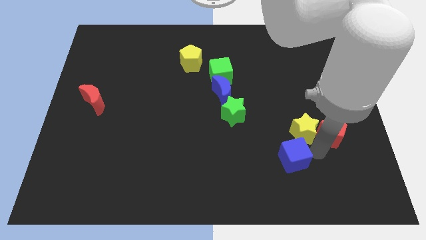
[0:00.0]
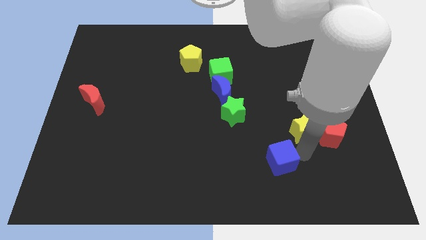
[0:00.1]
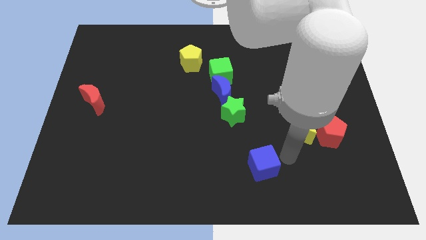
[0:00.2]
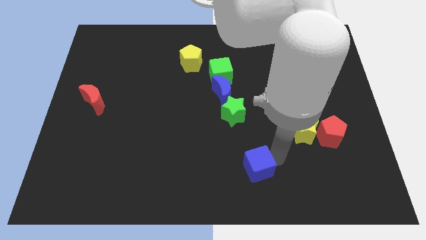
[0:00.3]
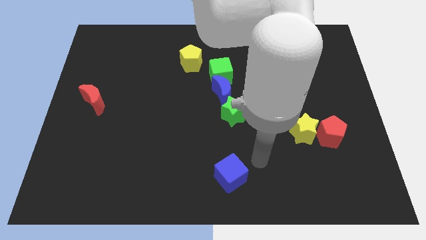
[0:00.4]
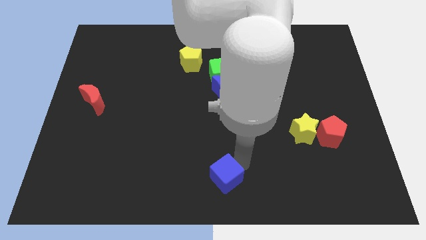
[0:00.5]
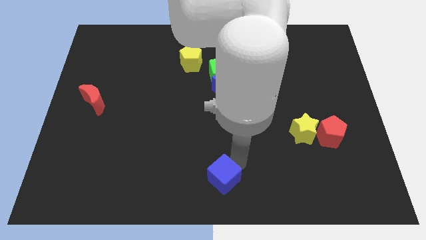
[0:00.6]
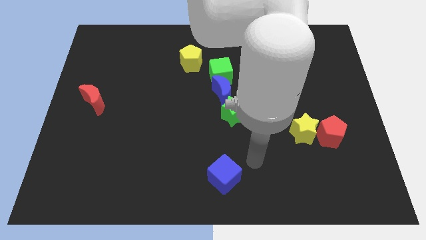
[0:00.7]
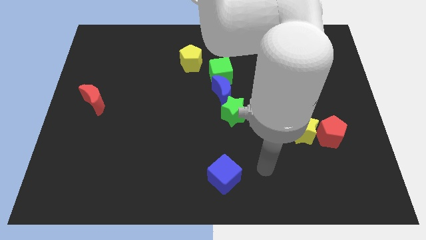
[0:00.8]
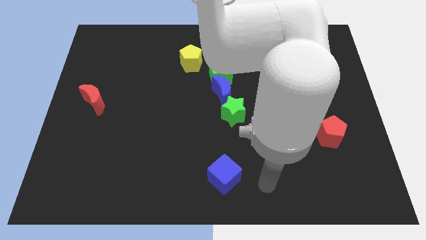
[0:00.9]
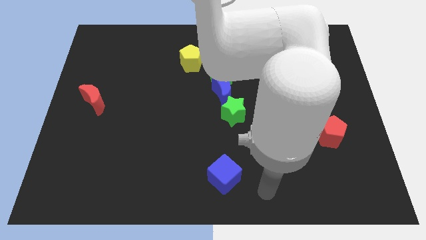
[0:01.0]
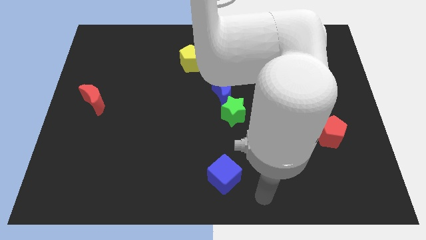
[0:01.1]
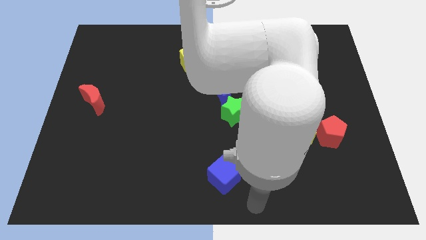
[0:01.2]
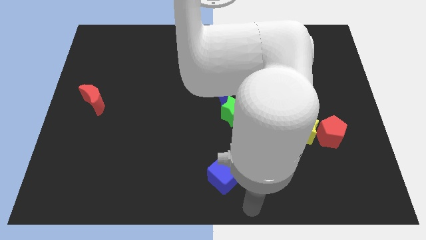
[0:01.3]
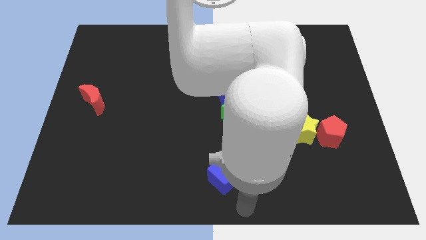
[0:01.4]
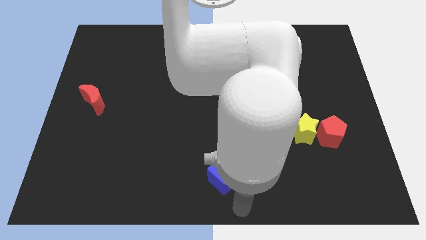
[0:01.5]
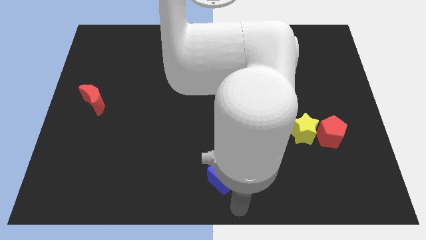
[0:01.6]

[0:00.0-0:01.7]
push the blue cube to the bottom center

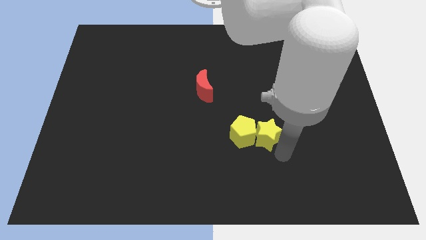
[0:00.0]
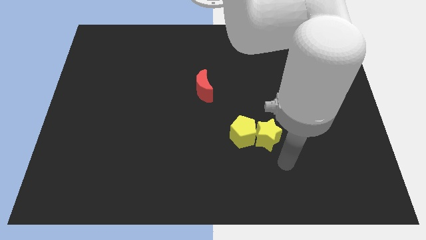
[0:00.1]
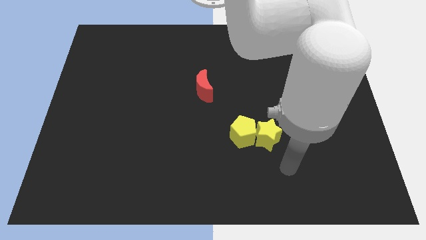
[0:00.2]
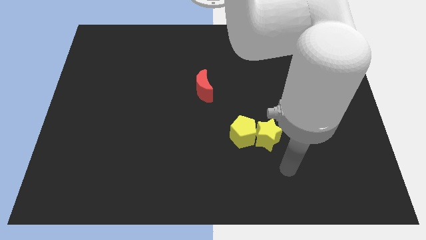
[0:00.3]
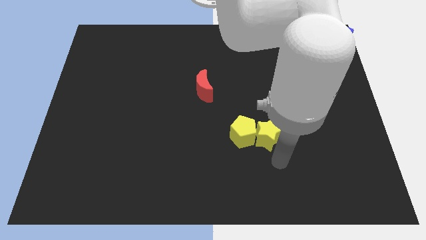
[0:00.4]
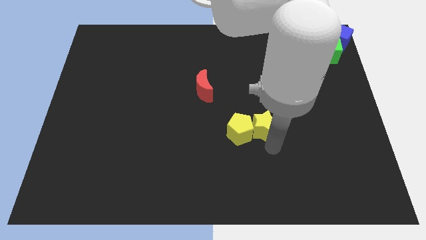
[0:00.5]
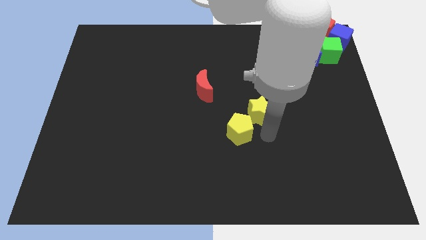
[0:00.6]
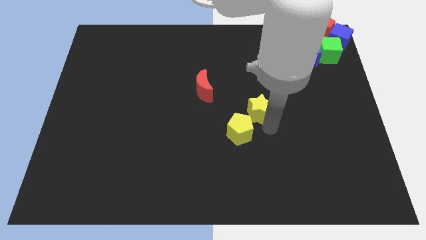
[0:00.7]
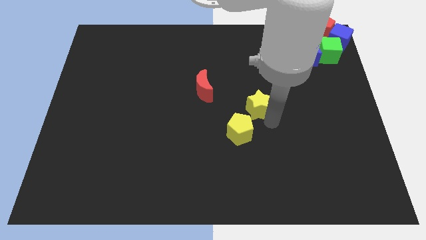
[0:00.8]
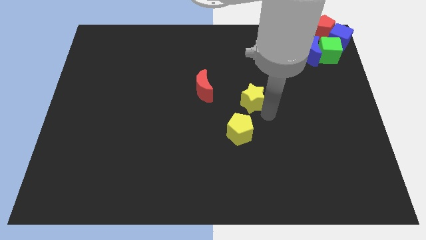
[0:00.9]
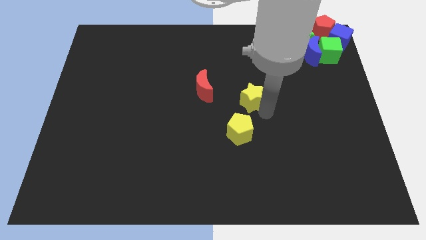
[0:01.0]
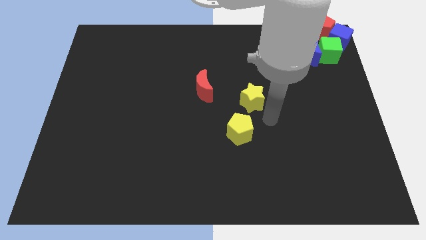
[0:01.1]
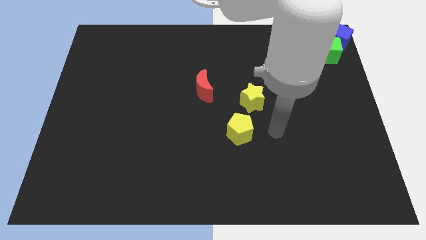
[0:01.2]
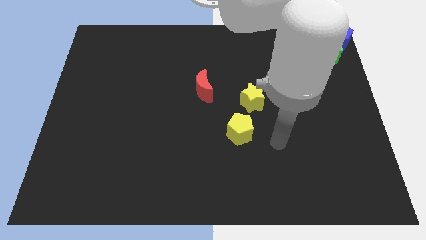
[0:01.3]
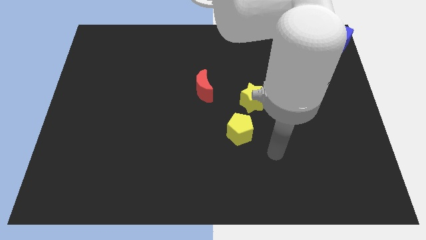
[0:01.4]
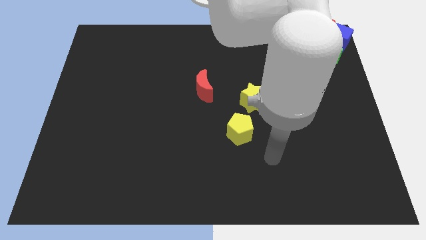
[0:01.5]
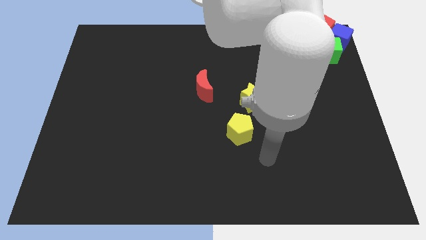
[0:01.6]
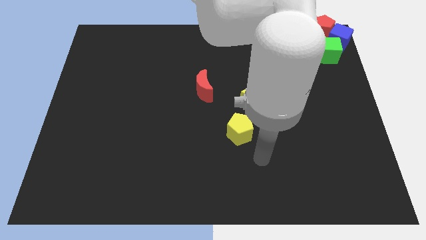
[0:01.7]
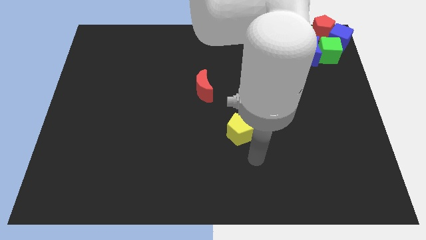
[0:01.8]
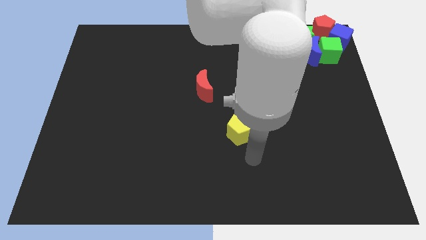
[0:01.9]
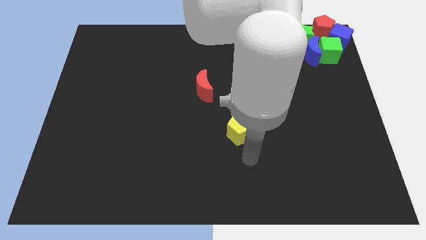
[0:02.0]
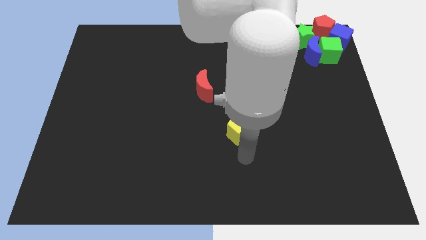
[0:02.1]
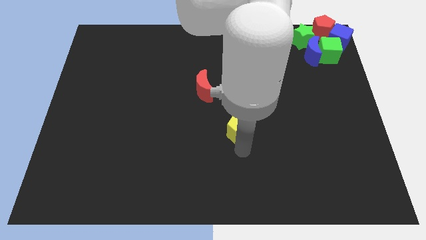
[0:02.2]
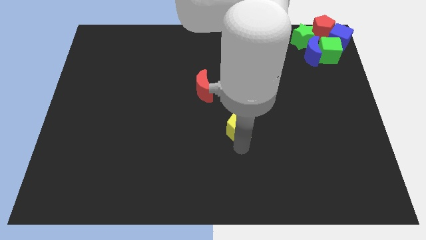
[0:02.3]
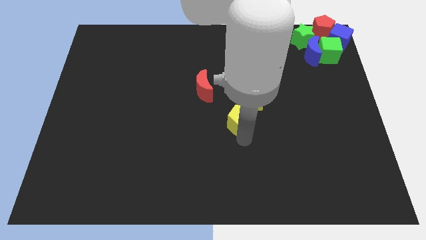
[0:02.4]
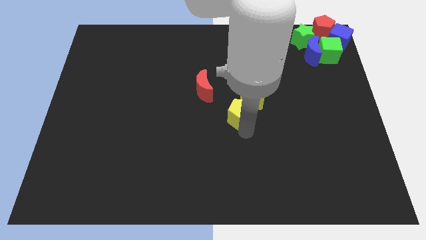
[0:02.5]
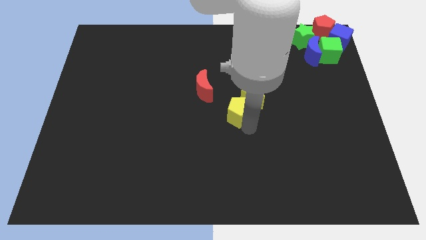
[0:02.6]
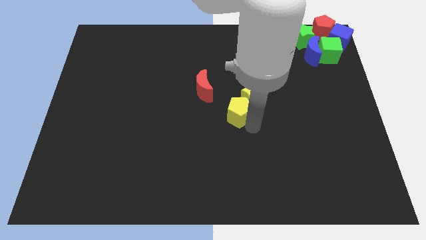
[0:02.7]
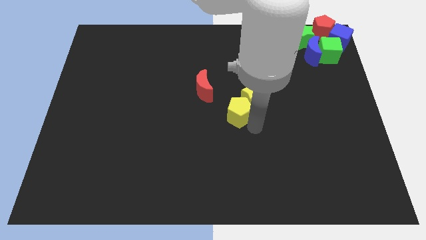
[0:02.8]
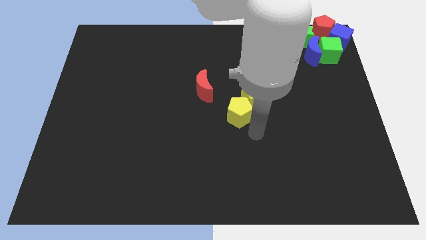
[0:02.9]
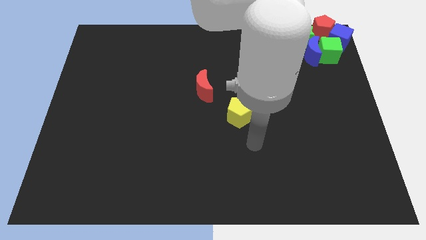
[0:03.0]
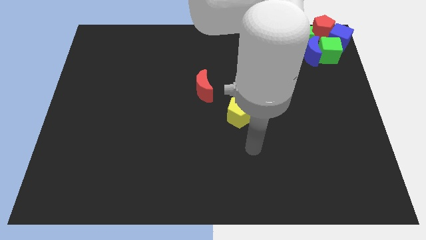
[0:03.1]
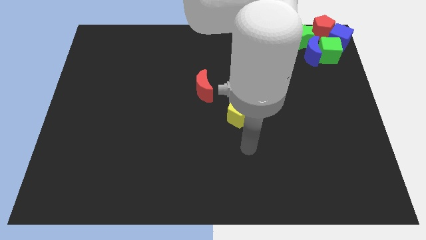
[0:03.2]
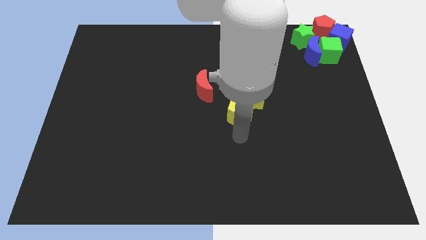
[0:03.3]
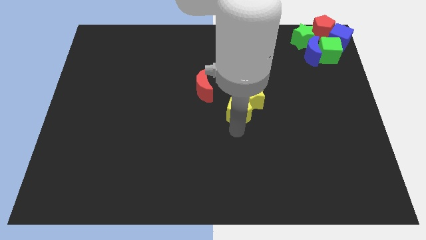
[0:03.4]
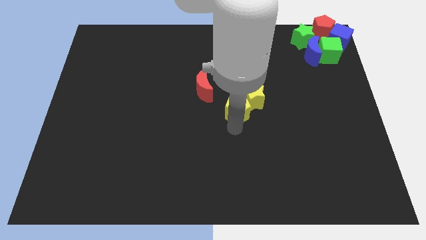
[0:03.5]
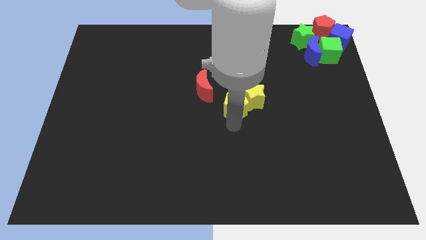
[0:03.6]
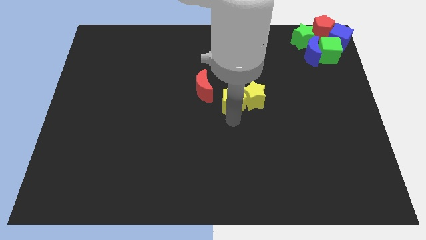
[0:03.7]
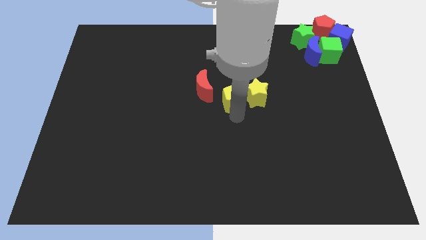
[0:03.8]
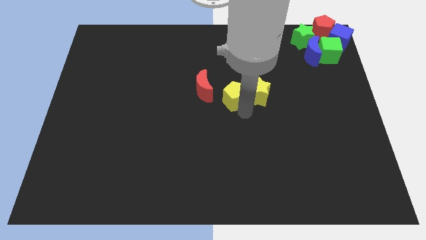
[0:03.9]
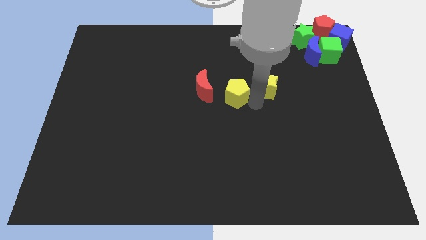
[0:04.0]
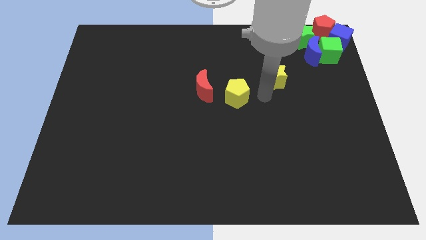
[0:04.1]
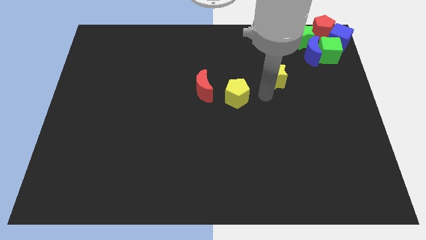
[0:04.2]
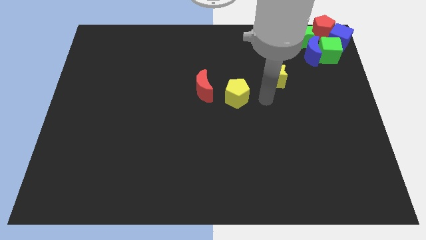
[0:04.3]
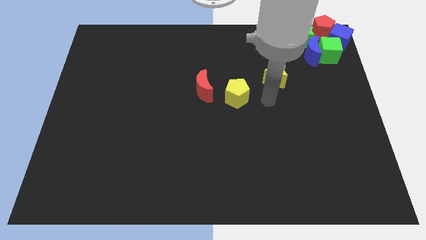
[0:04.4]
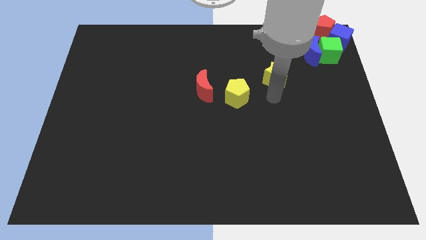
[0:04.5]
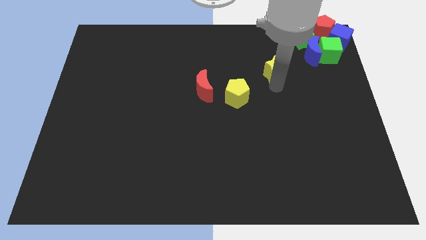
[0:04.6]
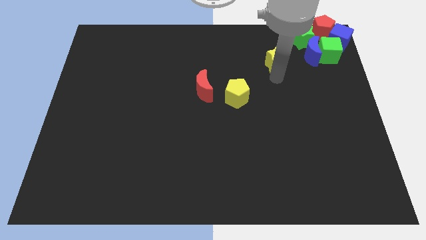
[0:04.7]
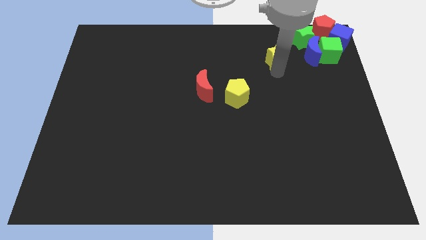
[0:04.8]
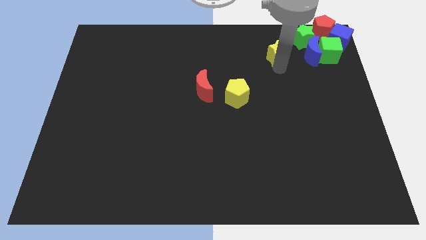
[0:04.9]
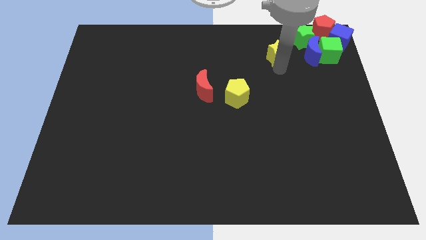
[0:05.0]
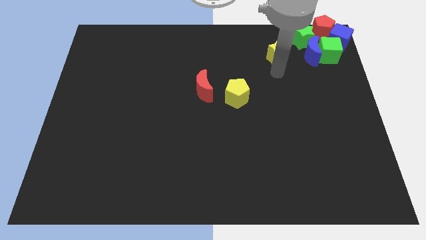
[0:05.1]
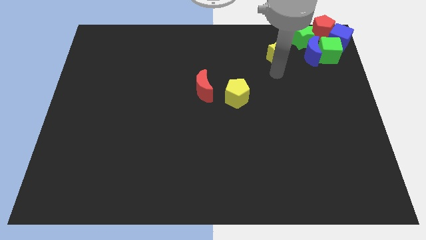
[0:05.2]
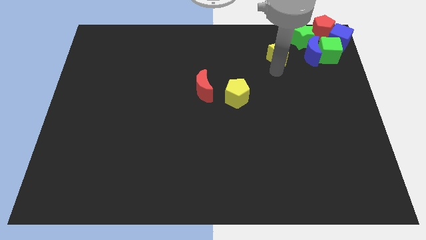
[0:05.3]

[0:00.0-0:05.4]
push the yellow star and pentagon towards the top

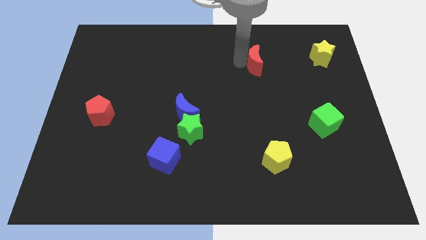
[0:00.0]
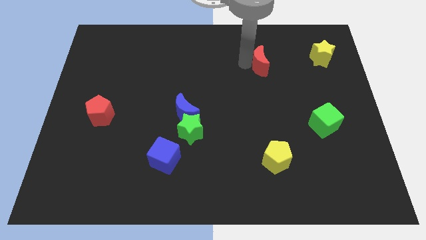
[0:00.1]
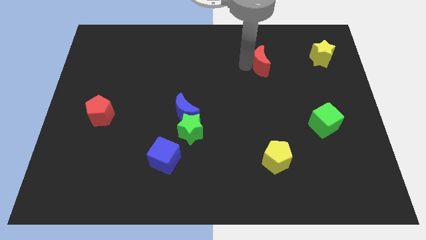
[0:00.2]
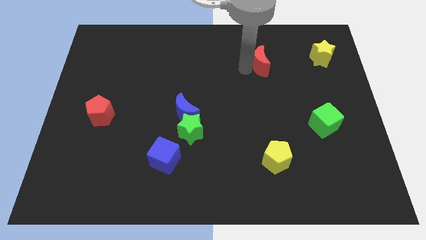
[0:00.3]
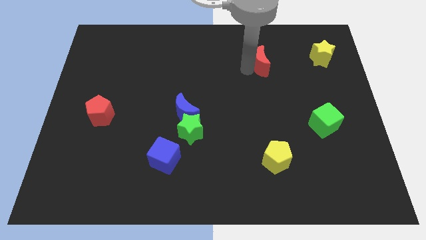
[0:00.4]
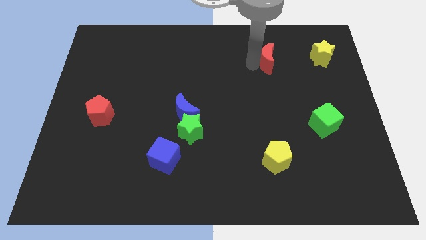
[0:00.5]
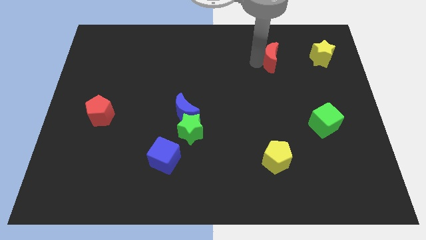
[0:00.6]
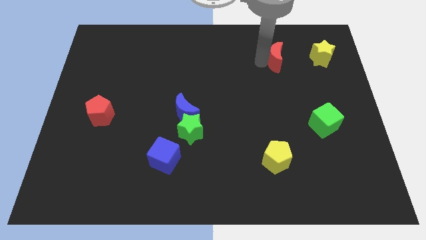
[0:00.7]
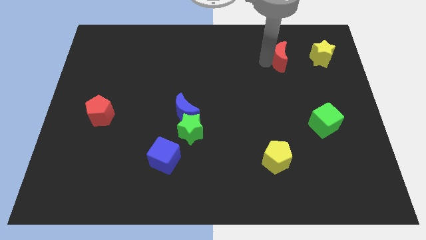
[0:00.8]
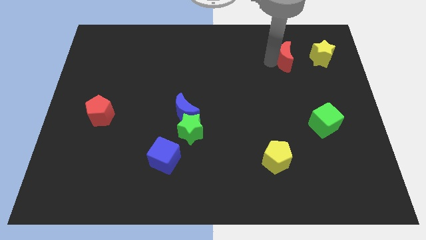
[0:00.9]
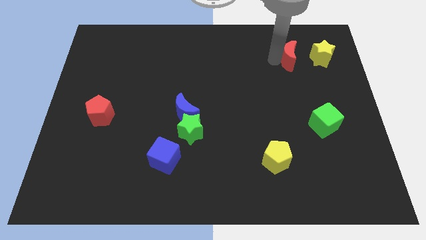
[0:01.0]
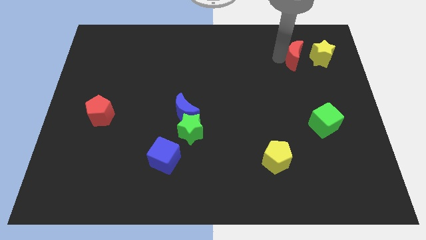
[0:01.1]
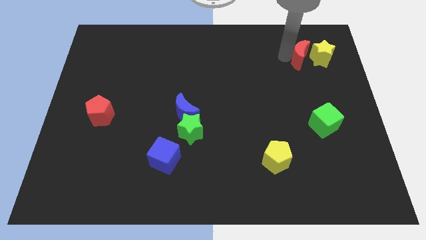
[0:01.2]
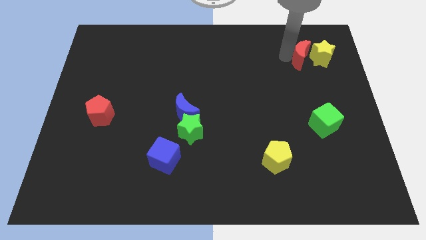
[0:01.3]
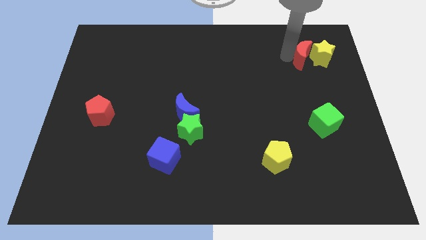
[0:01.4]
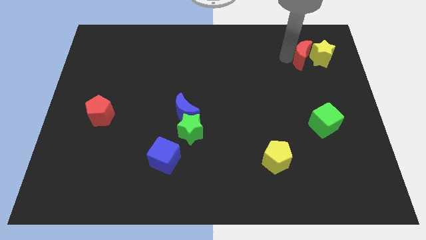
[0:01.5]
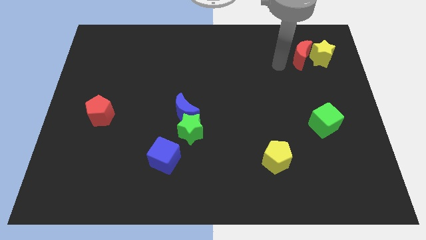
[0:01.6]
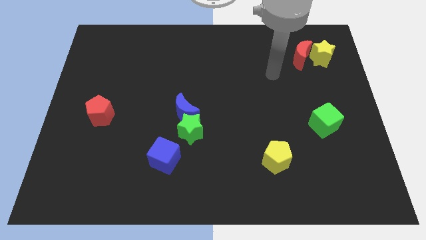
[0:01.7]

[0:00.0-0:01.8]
push the red moon left to the yellow star

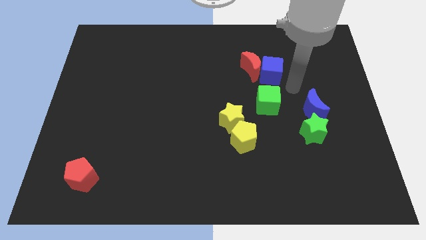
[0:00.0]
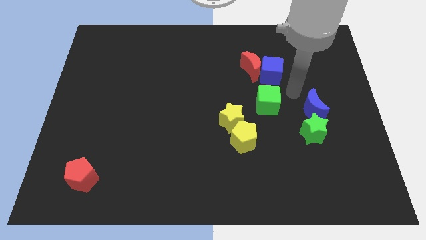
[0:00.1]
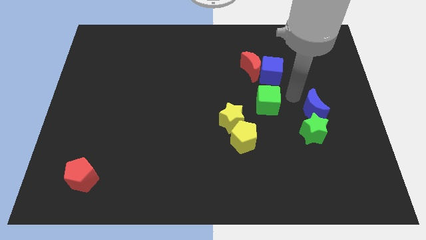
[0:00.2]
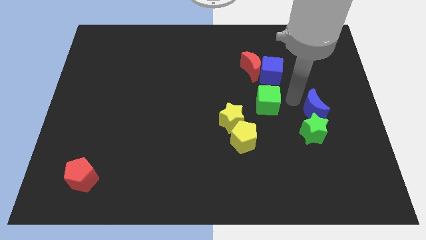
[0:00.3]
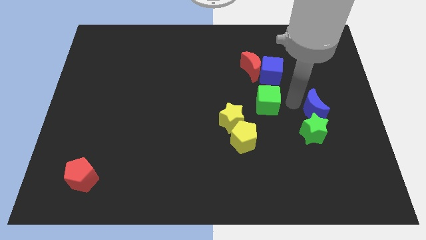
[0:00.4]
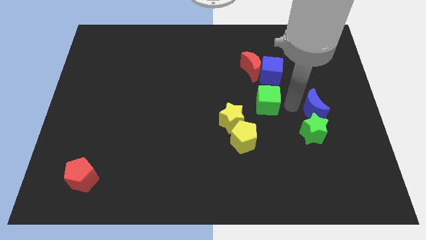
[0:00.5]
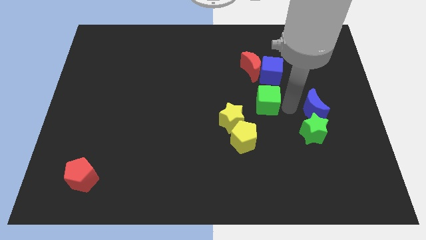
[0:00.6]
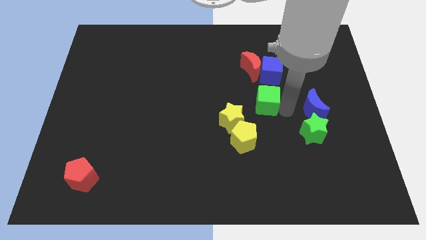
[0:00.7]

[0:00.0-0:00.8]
place arm near green cube
